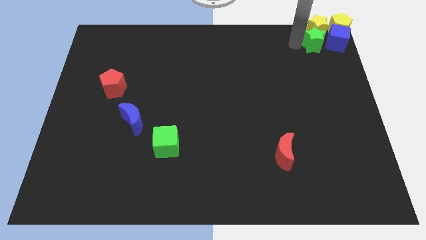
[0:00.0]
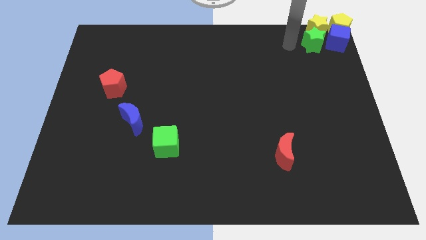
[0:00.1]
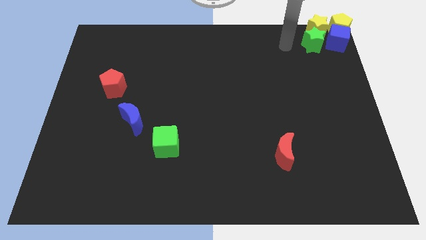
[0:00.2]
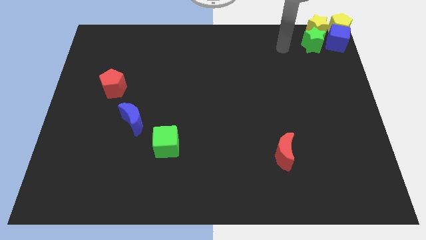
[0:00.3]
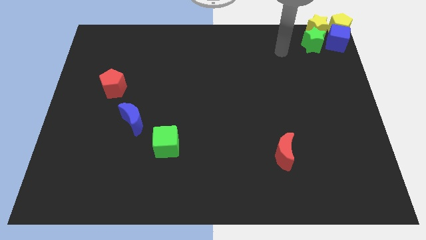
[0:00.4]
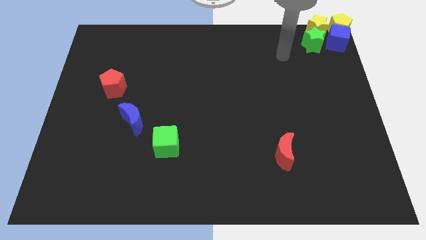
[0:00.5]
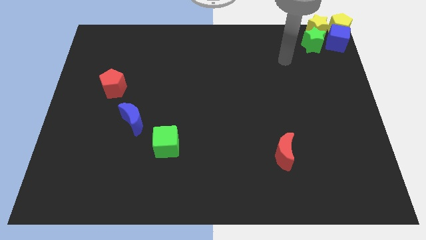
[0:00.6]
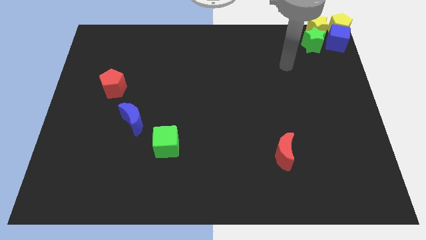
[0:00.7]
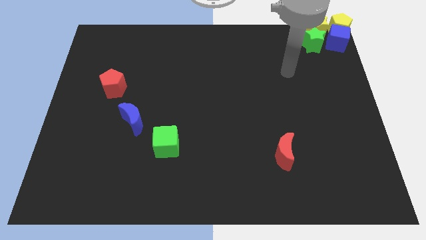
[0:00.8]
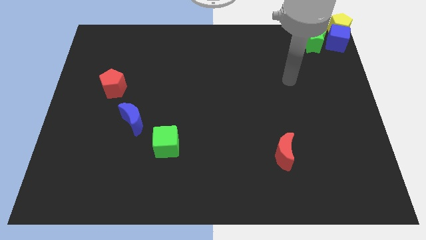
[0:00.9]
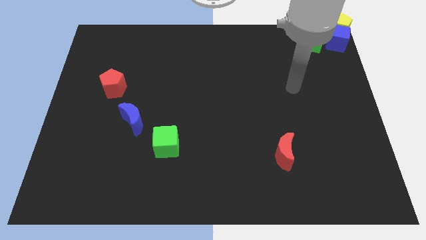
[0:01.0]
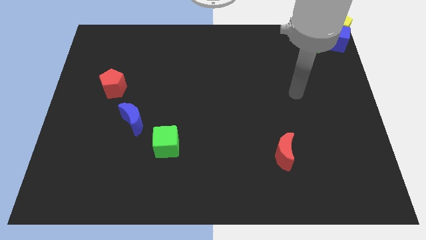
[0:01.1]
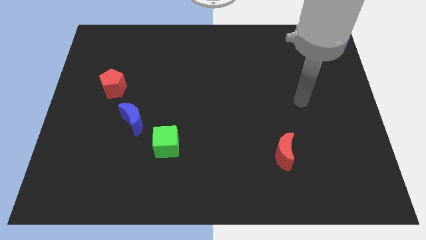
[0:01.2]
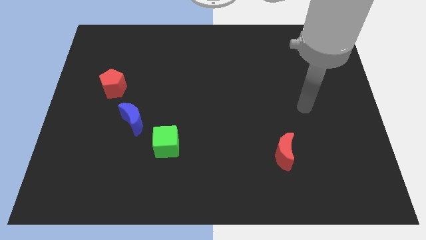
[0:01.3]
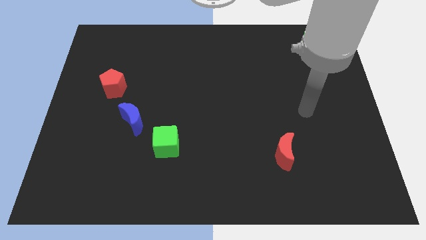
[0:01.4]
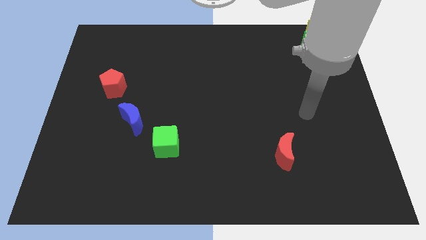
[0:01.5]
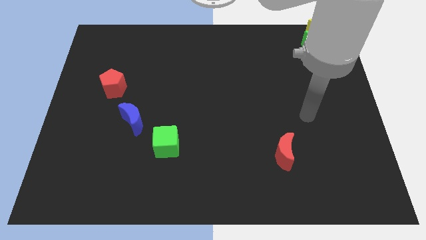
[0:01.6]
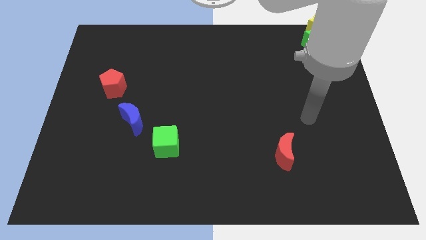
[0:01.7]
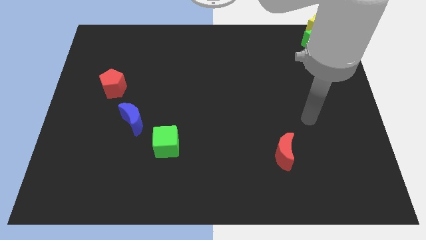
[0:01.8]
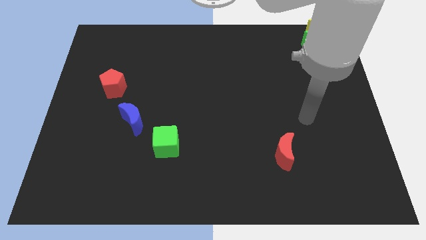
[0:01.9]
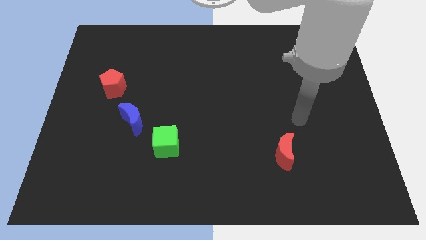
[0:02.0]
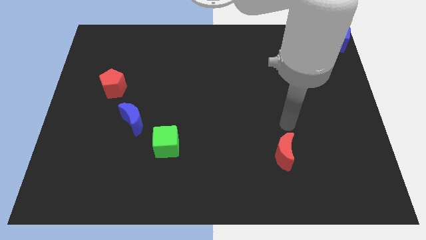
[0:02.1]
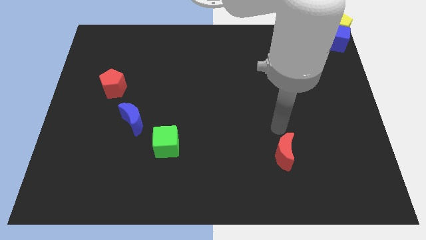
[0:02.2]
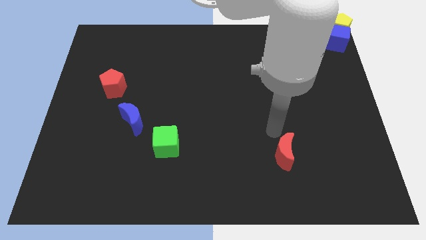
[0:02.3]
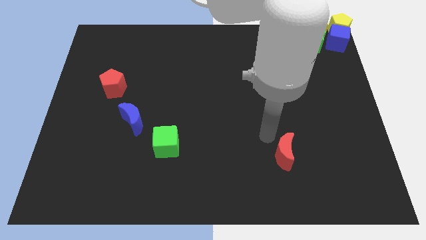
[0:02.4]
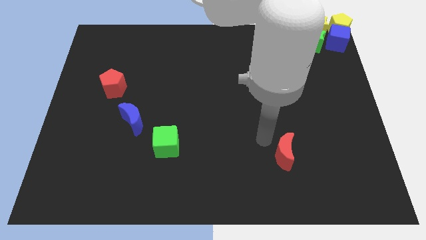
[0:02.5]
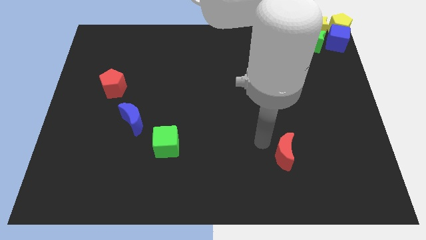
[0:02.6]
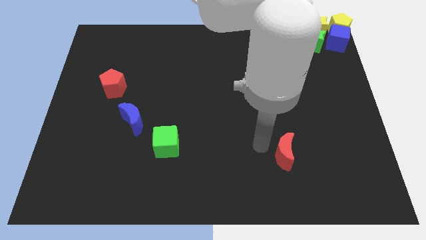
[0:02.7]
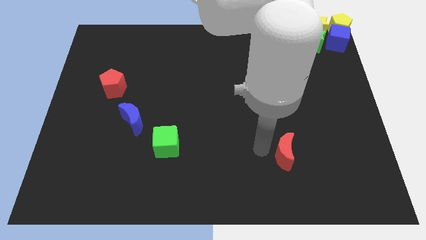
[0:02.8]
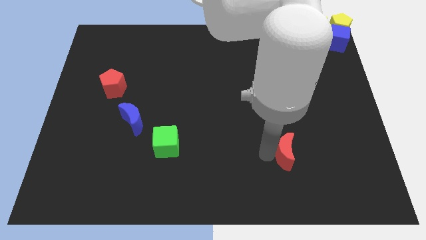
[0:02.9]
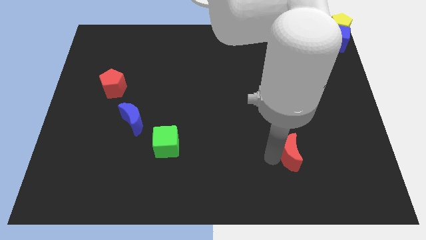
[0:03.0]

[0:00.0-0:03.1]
place the arm left to the red moon

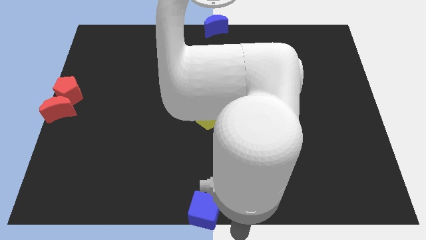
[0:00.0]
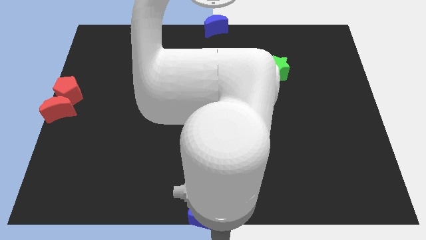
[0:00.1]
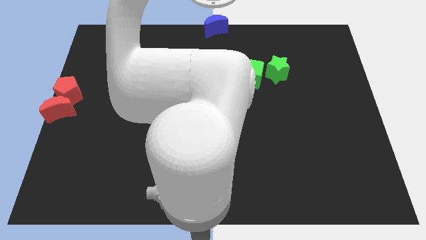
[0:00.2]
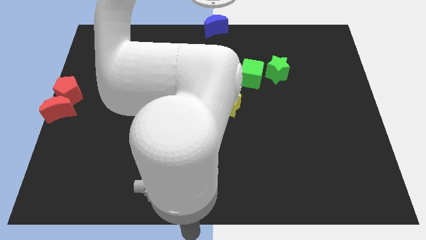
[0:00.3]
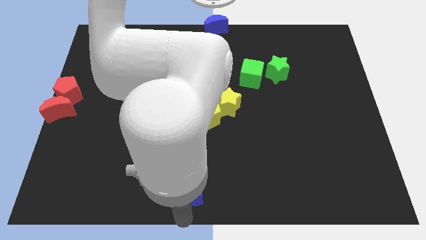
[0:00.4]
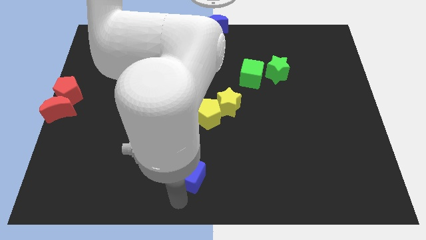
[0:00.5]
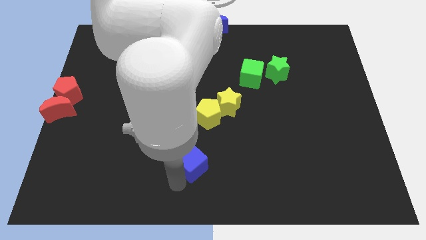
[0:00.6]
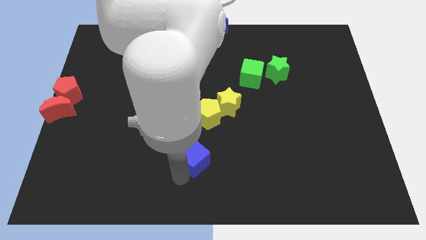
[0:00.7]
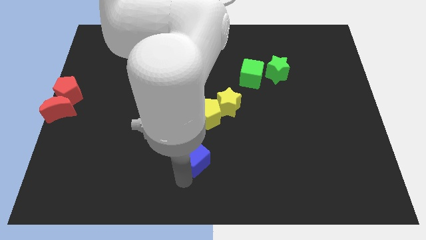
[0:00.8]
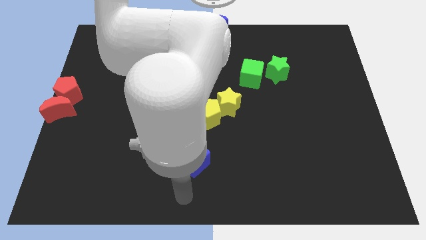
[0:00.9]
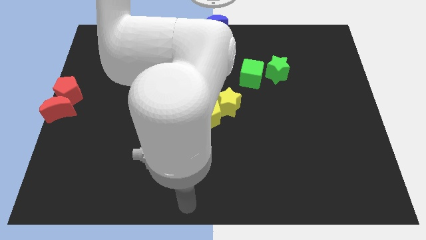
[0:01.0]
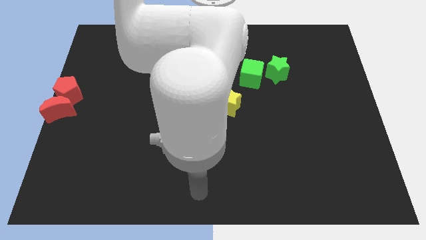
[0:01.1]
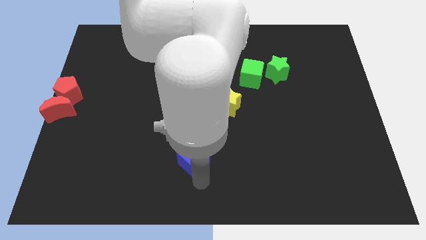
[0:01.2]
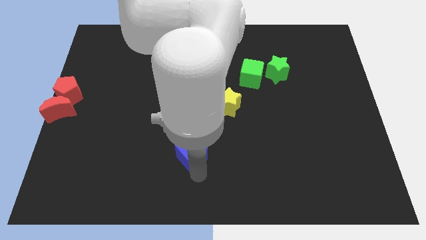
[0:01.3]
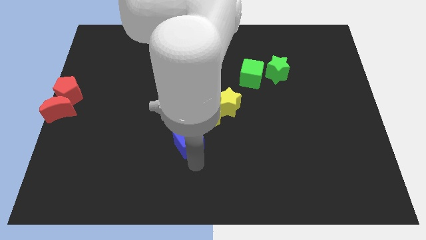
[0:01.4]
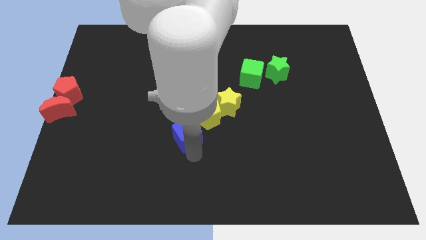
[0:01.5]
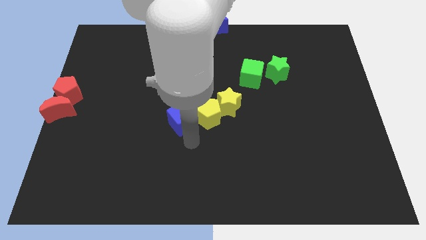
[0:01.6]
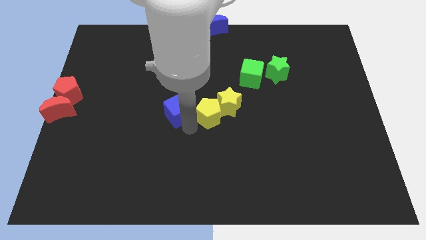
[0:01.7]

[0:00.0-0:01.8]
push blue cube beside yellow pentagon

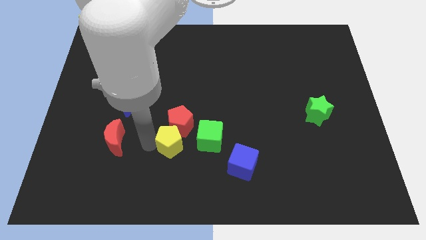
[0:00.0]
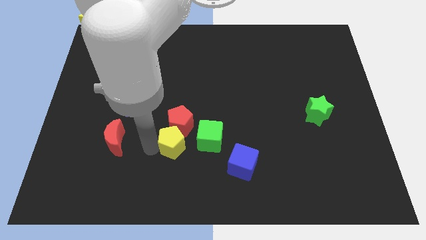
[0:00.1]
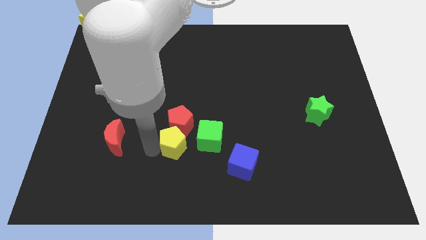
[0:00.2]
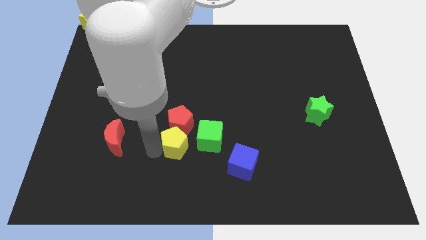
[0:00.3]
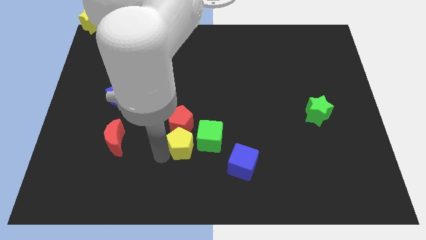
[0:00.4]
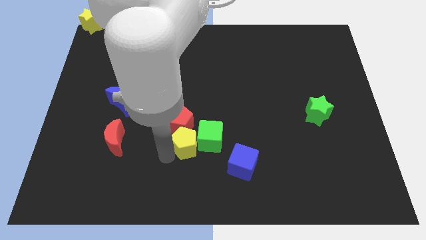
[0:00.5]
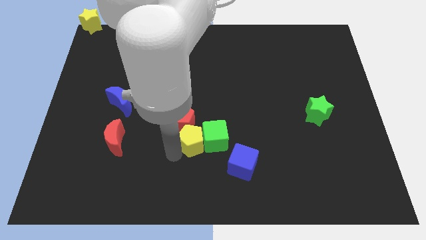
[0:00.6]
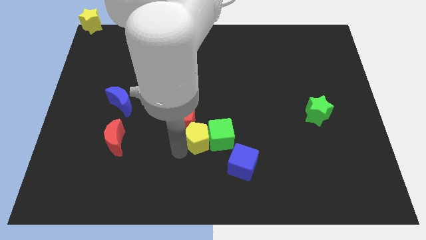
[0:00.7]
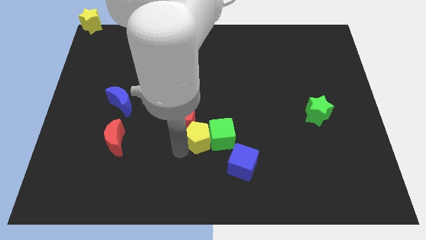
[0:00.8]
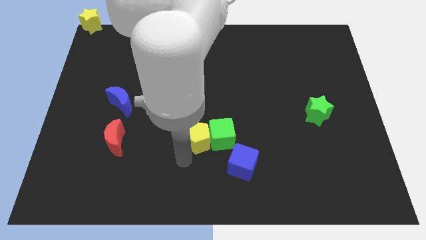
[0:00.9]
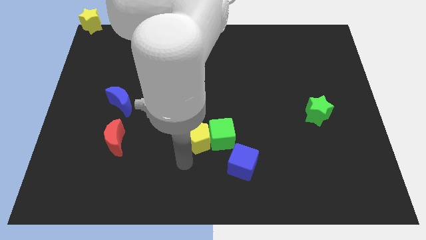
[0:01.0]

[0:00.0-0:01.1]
push yellow pentagon into green cube

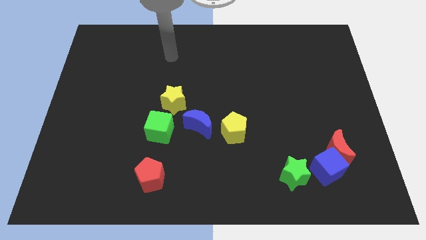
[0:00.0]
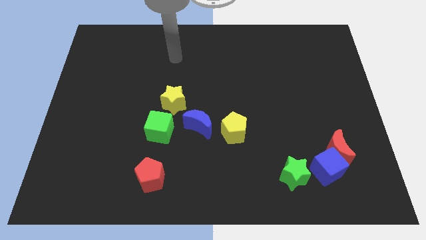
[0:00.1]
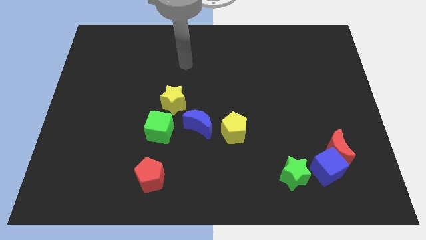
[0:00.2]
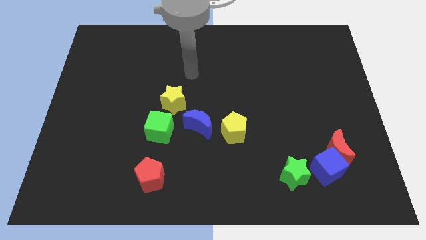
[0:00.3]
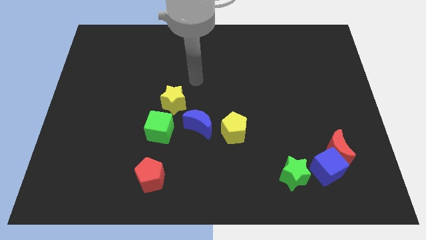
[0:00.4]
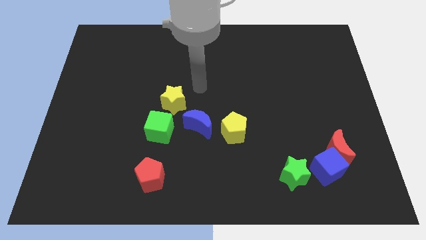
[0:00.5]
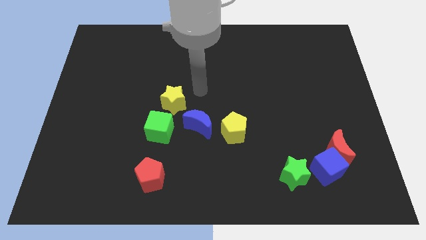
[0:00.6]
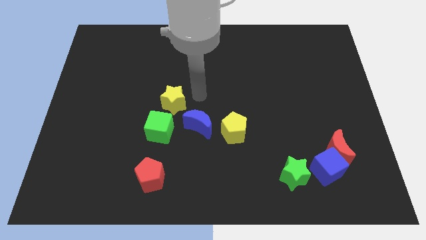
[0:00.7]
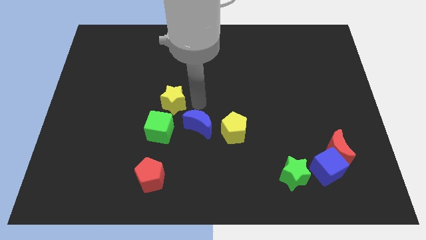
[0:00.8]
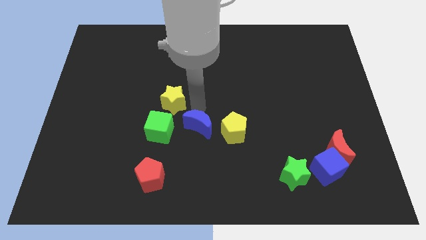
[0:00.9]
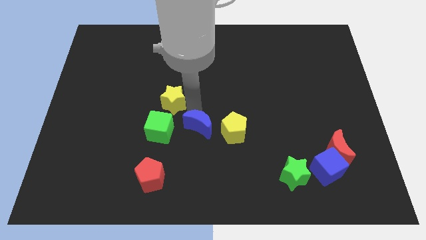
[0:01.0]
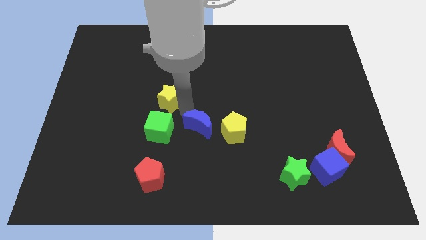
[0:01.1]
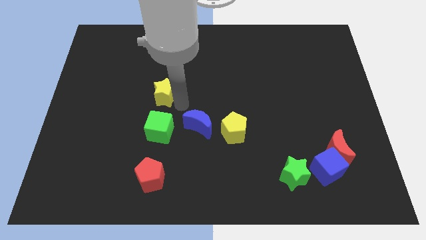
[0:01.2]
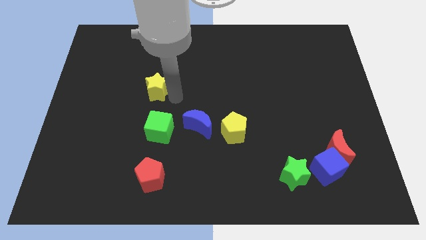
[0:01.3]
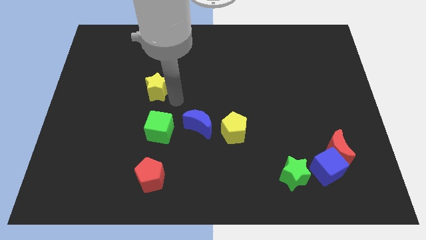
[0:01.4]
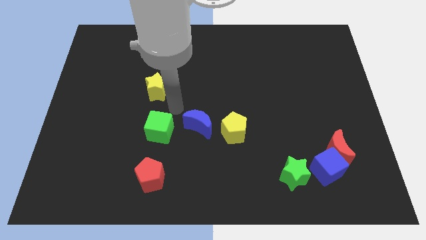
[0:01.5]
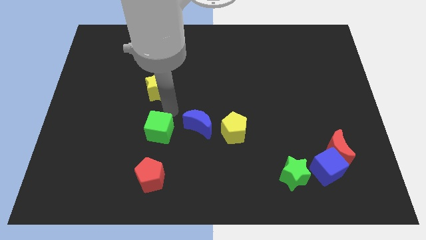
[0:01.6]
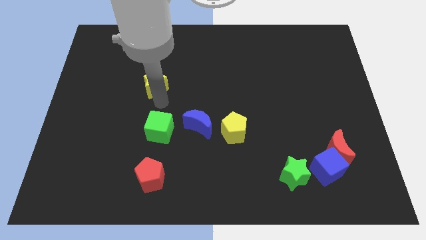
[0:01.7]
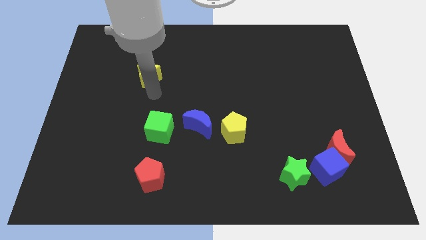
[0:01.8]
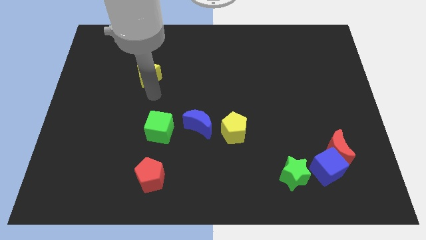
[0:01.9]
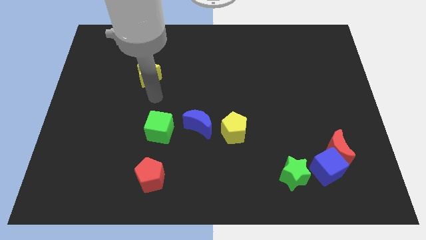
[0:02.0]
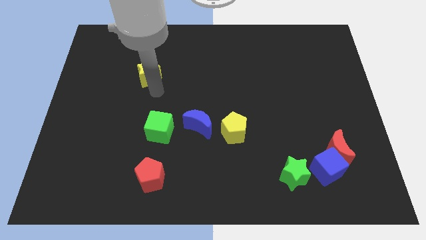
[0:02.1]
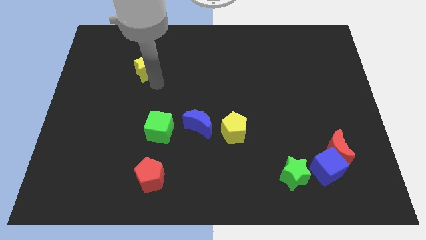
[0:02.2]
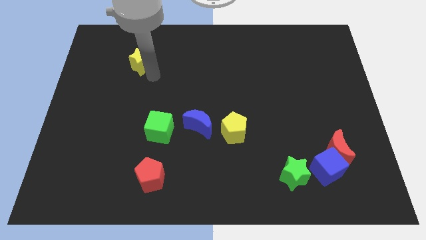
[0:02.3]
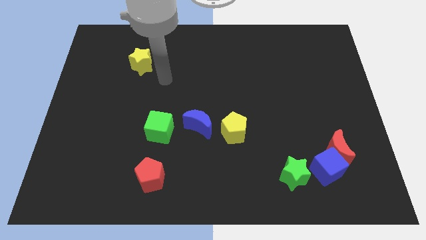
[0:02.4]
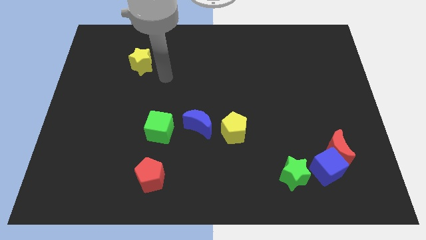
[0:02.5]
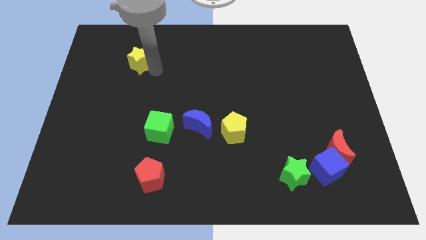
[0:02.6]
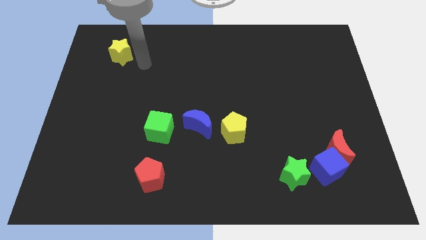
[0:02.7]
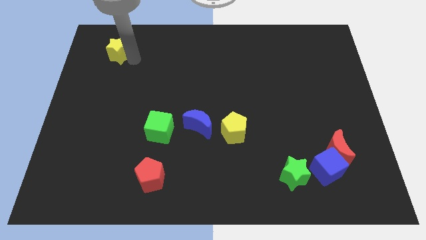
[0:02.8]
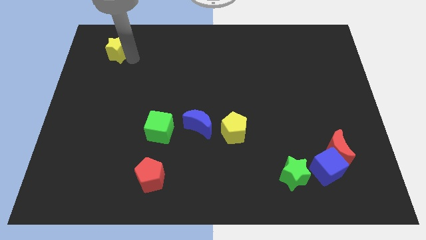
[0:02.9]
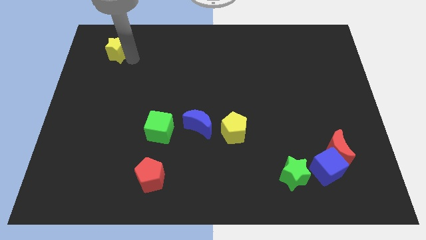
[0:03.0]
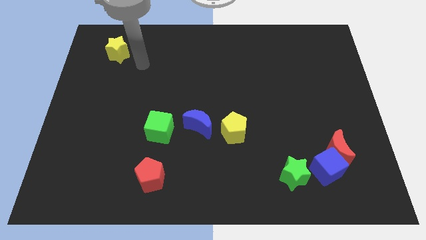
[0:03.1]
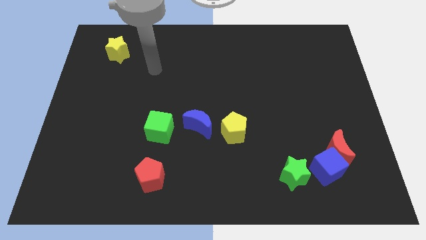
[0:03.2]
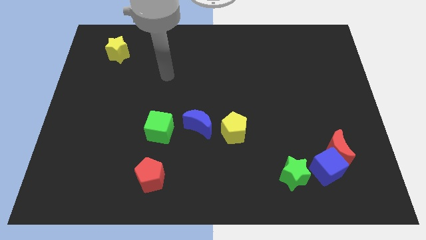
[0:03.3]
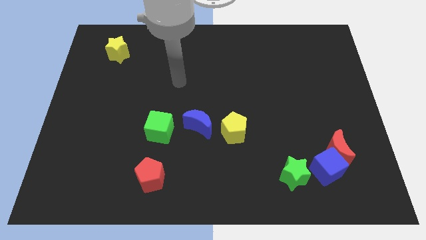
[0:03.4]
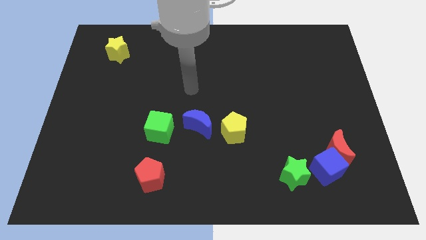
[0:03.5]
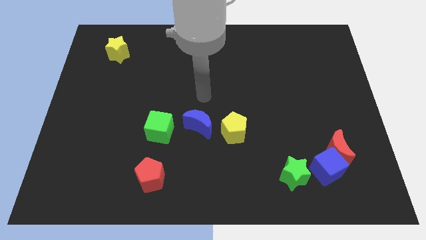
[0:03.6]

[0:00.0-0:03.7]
place the yellow star to the top left of the board
